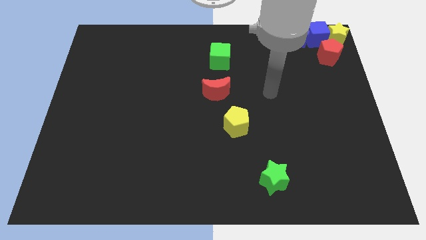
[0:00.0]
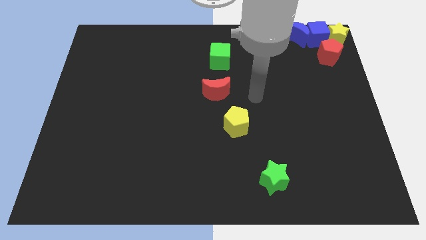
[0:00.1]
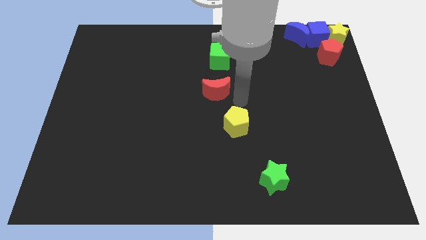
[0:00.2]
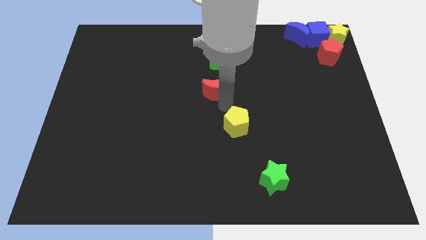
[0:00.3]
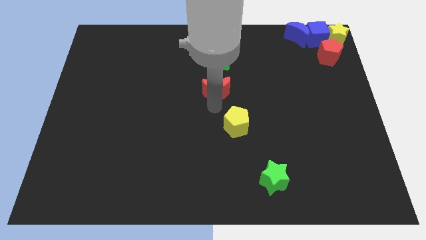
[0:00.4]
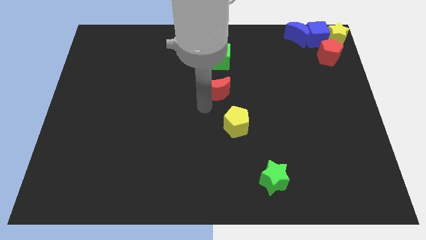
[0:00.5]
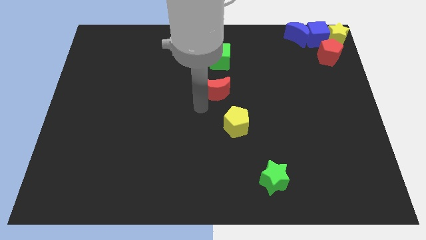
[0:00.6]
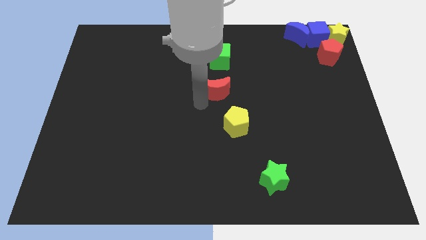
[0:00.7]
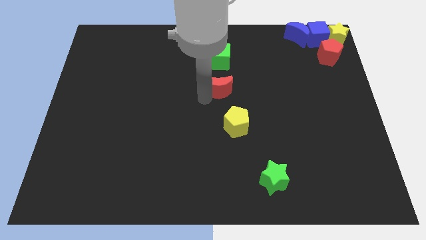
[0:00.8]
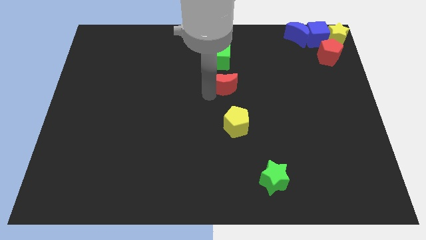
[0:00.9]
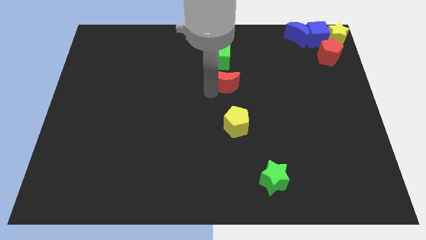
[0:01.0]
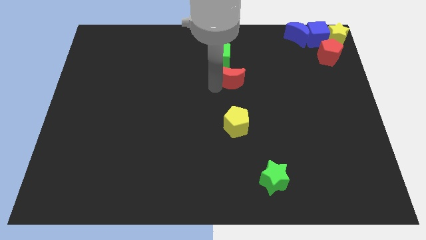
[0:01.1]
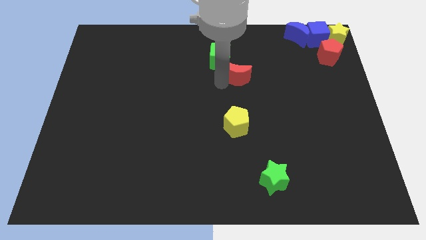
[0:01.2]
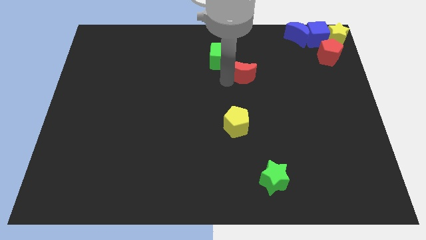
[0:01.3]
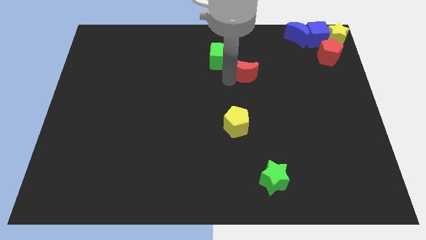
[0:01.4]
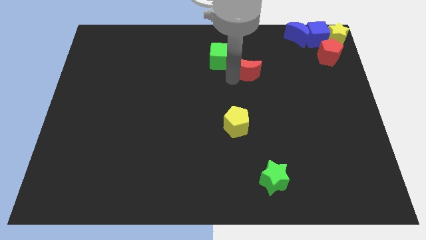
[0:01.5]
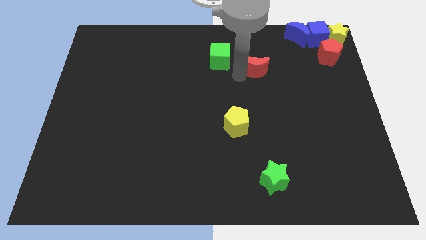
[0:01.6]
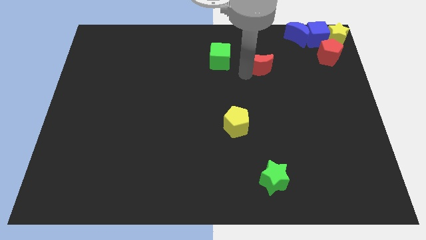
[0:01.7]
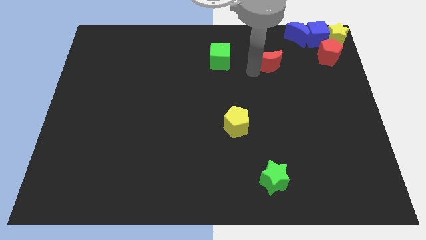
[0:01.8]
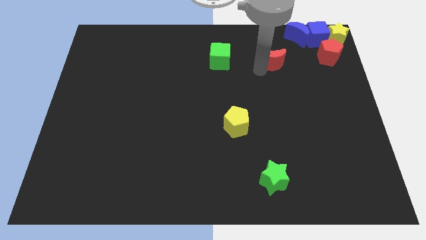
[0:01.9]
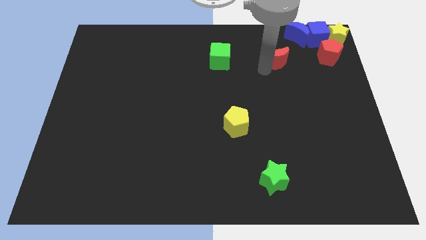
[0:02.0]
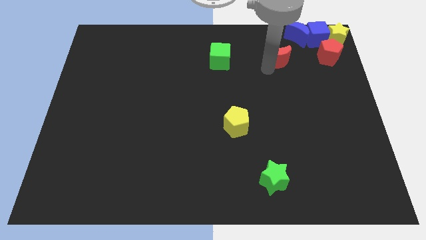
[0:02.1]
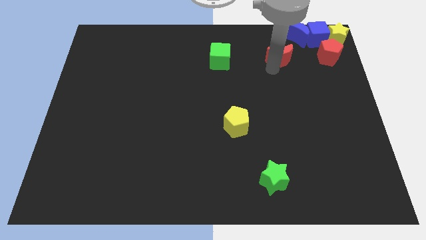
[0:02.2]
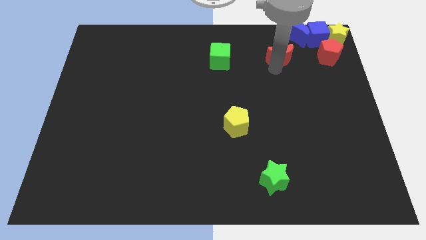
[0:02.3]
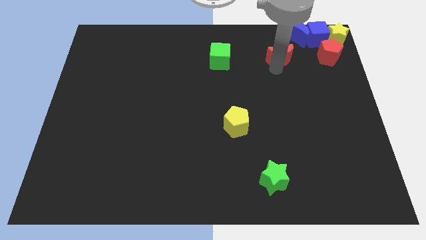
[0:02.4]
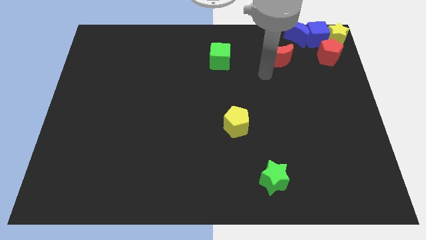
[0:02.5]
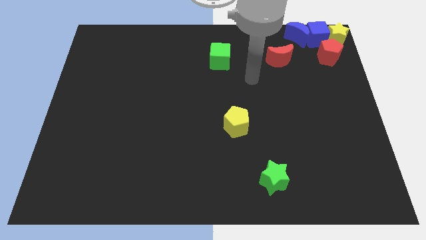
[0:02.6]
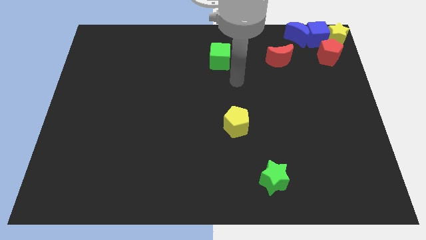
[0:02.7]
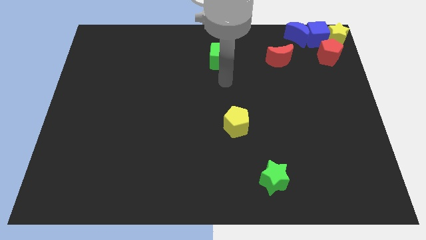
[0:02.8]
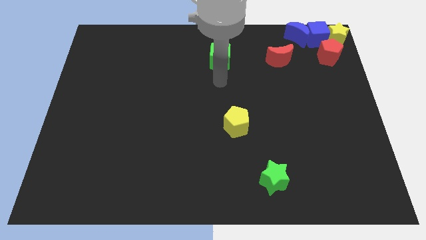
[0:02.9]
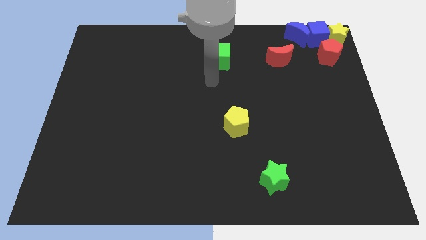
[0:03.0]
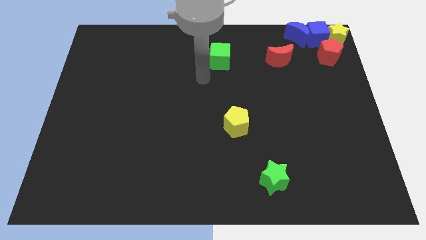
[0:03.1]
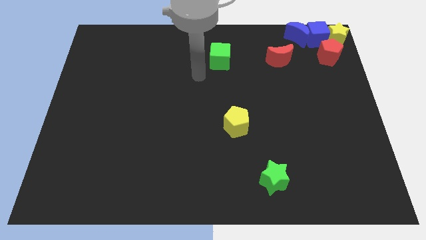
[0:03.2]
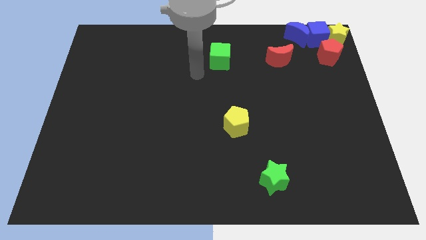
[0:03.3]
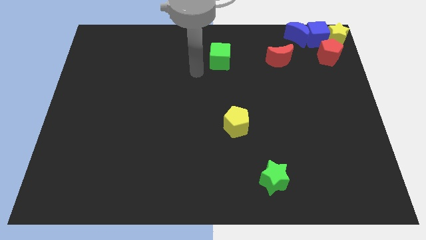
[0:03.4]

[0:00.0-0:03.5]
put the red crescent to the right of the green cube

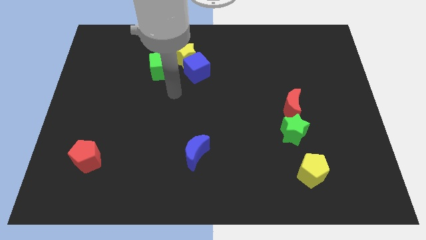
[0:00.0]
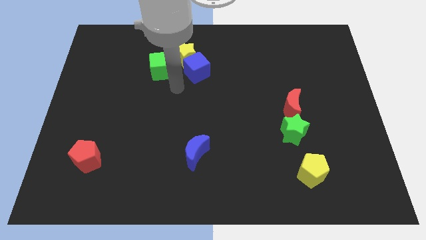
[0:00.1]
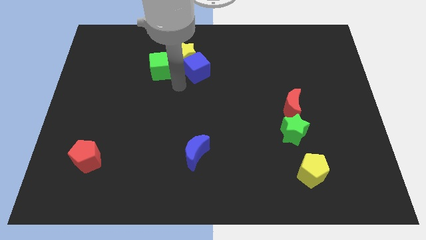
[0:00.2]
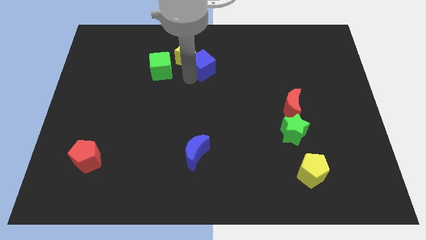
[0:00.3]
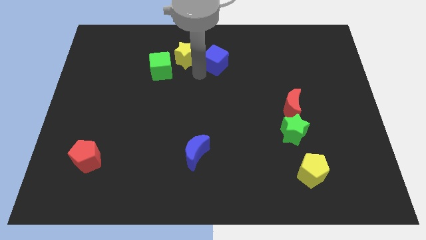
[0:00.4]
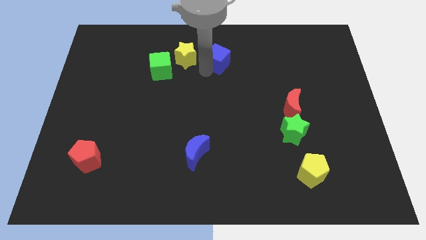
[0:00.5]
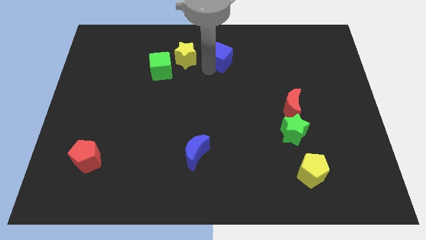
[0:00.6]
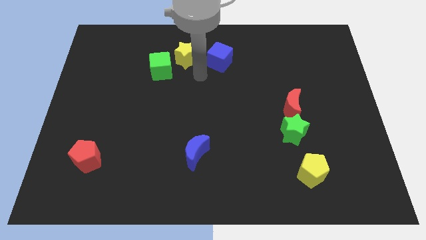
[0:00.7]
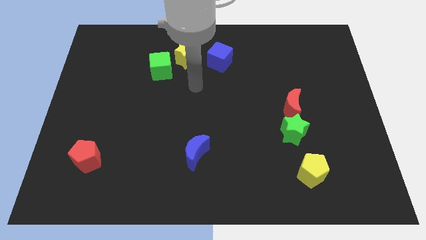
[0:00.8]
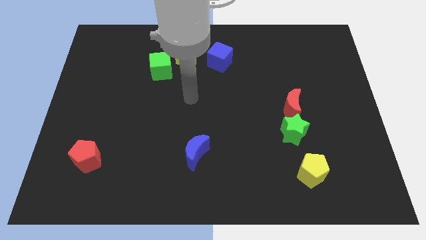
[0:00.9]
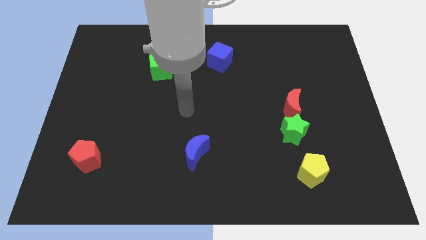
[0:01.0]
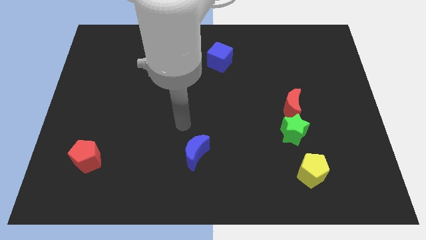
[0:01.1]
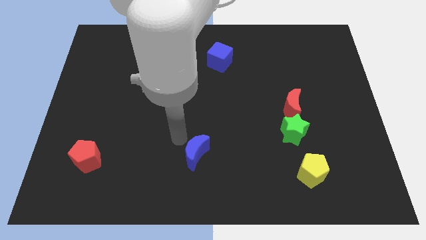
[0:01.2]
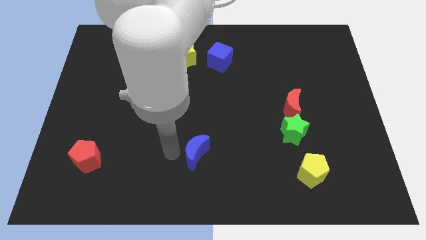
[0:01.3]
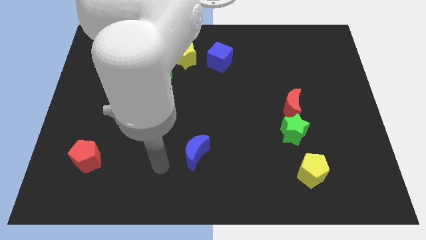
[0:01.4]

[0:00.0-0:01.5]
push the blue cube to the top right side of the board

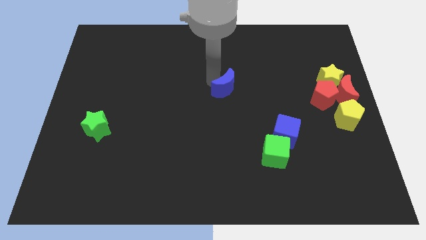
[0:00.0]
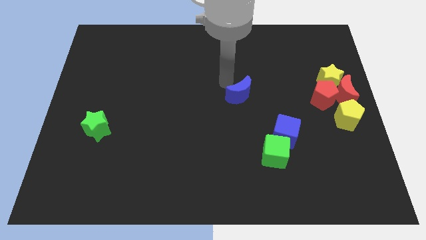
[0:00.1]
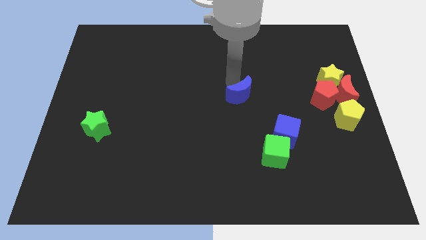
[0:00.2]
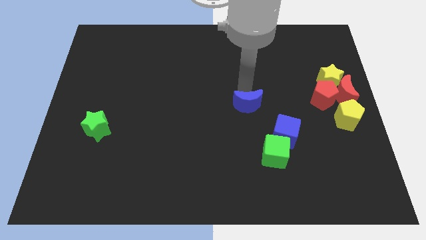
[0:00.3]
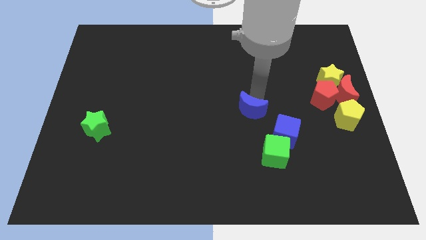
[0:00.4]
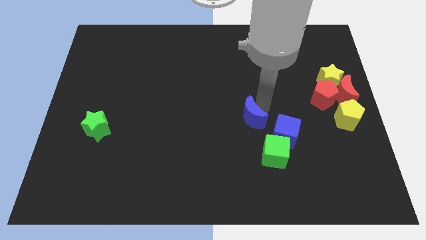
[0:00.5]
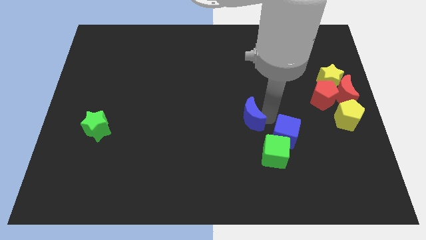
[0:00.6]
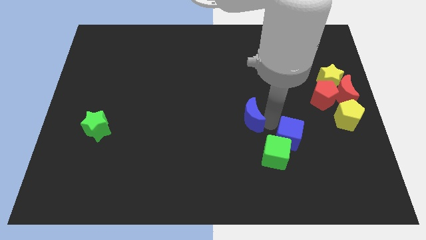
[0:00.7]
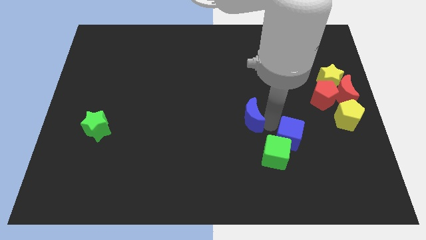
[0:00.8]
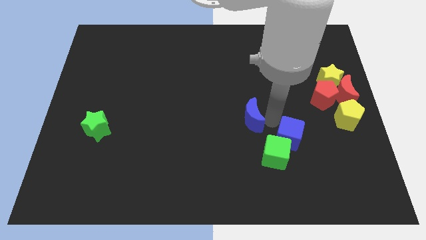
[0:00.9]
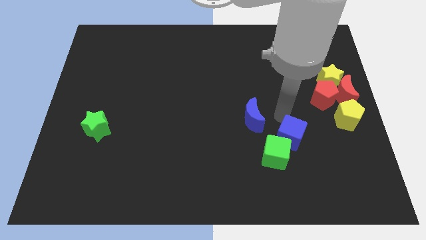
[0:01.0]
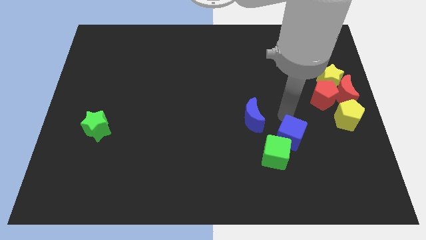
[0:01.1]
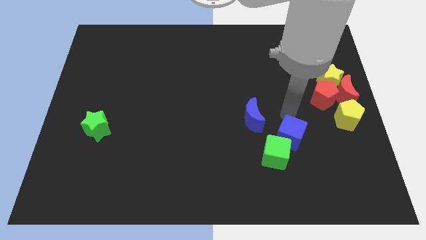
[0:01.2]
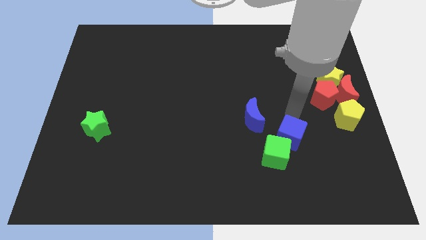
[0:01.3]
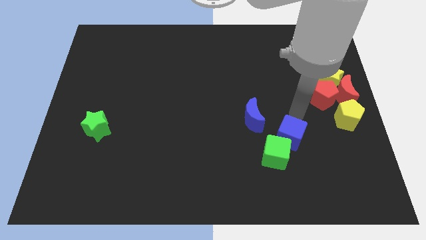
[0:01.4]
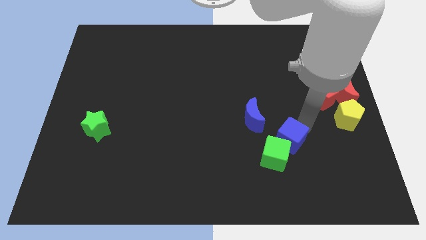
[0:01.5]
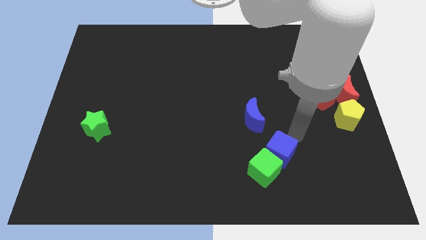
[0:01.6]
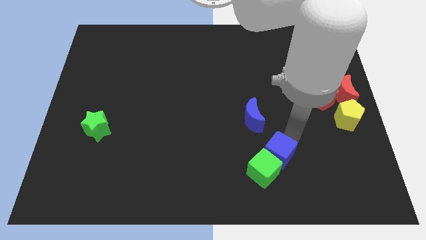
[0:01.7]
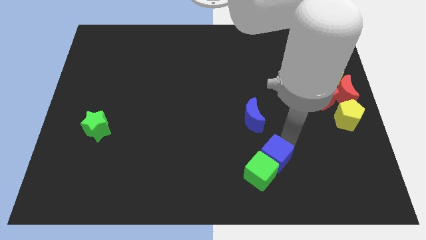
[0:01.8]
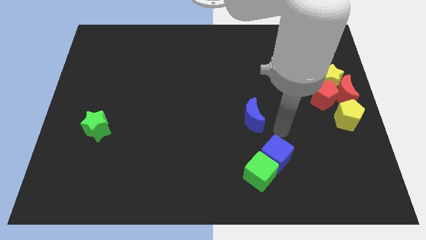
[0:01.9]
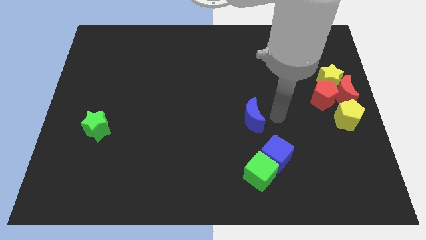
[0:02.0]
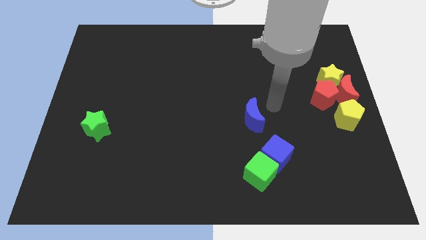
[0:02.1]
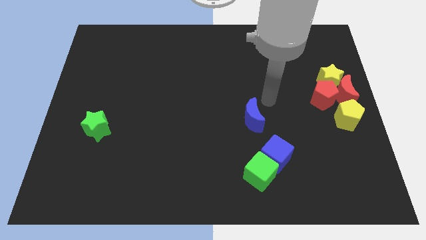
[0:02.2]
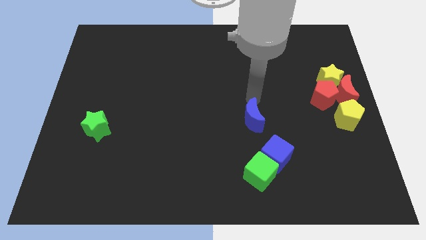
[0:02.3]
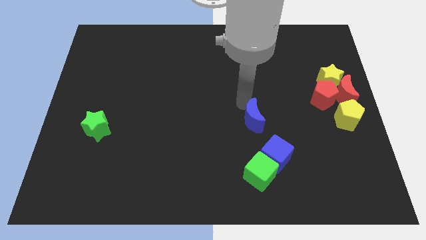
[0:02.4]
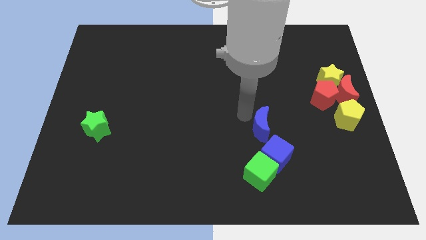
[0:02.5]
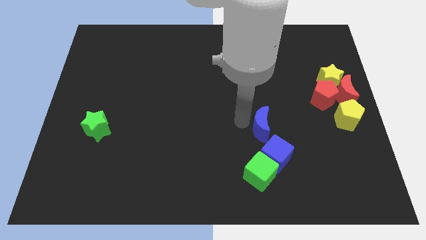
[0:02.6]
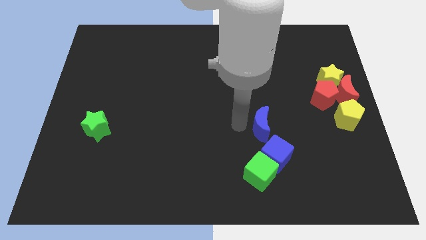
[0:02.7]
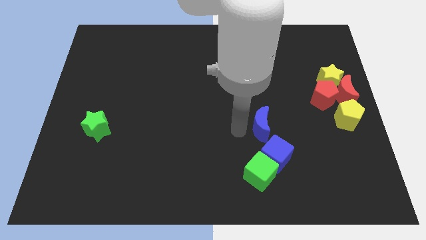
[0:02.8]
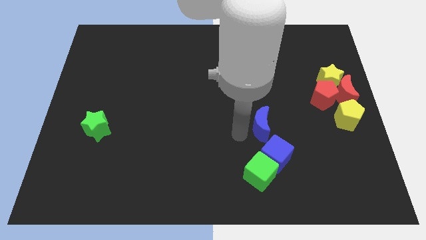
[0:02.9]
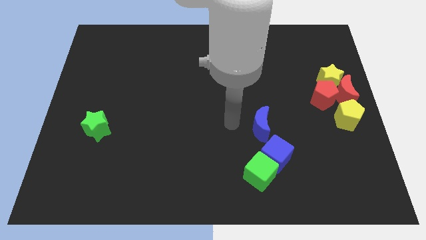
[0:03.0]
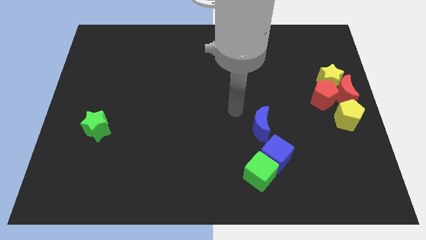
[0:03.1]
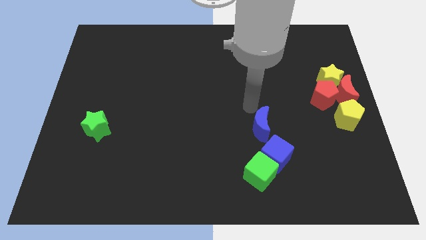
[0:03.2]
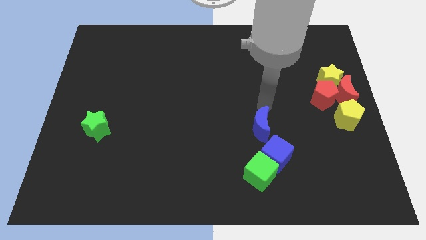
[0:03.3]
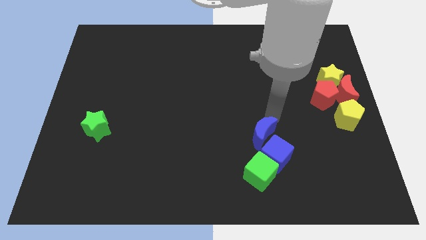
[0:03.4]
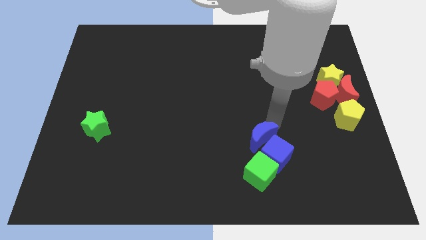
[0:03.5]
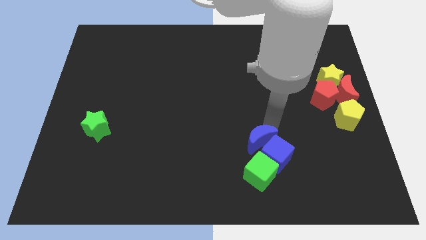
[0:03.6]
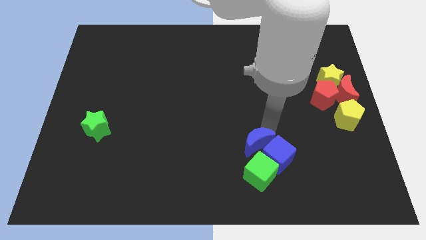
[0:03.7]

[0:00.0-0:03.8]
push the blue moon into the blue cube

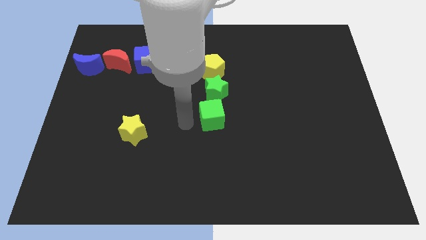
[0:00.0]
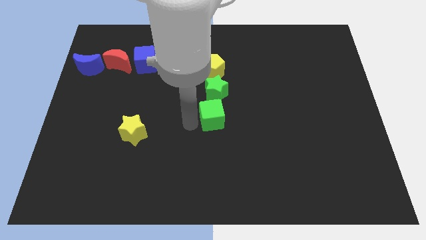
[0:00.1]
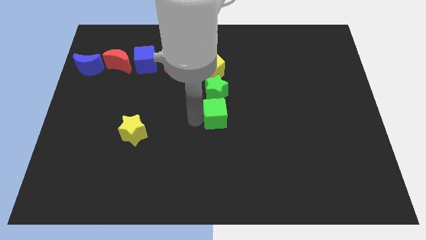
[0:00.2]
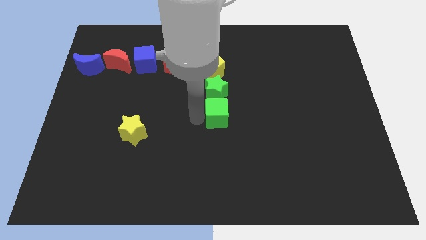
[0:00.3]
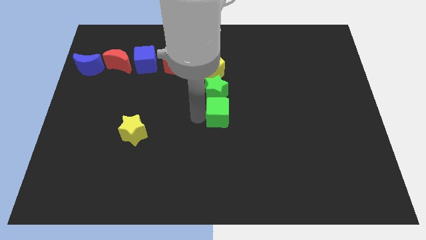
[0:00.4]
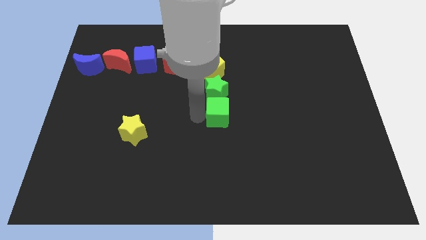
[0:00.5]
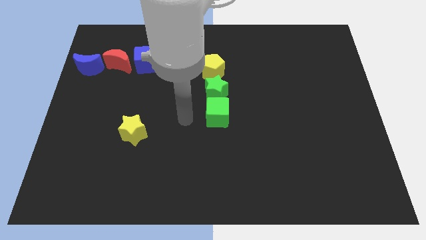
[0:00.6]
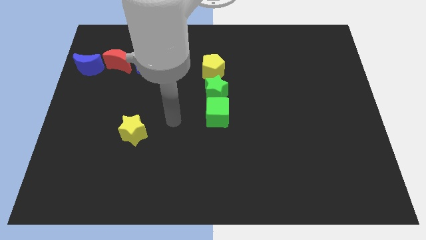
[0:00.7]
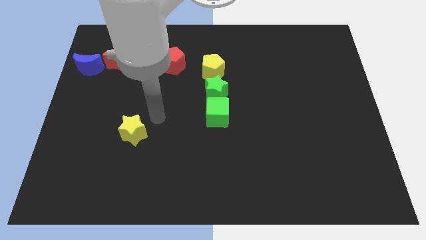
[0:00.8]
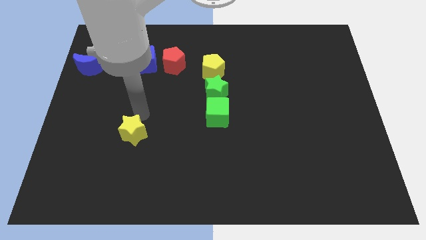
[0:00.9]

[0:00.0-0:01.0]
place the green cube below the green star
